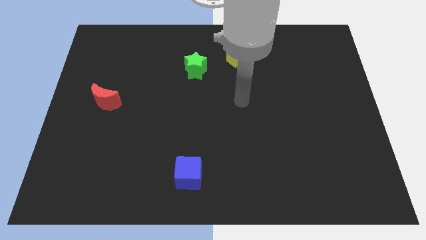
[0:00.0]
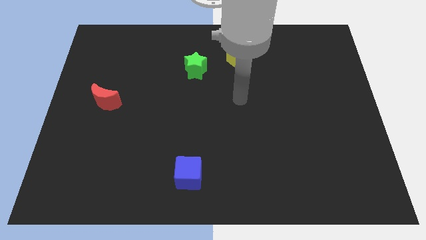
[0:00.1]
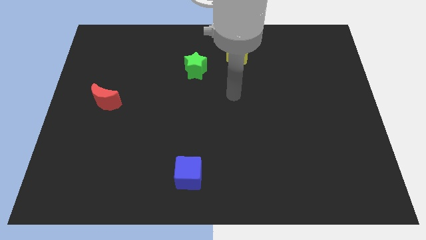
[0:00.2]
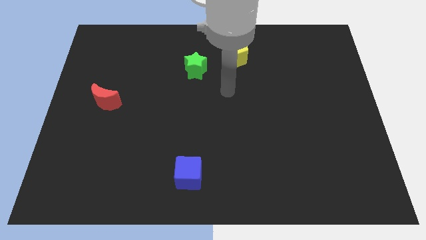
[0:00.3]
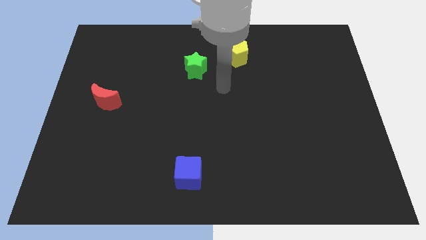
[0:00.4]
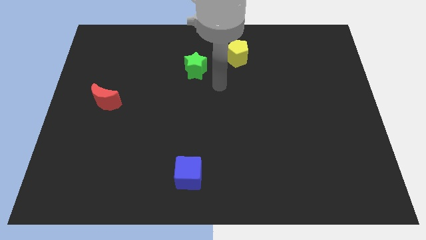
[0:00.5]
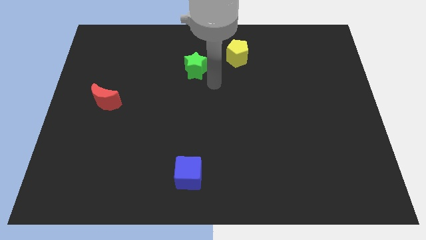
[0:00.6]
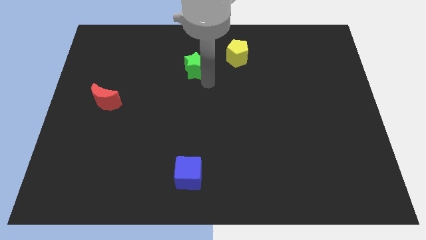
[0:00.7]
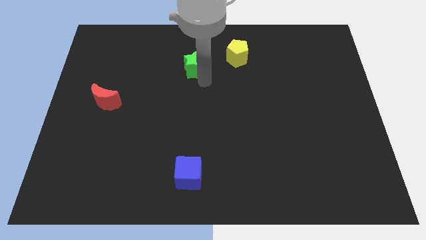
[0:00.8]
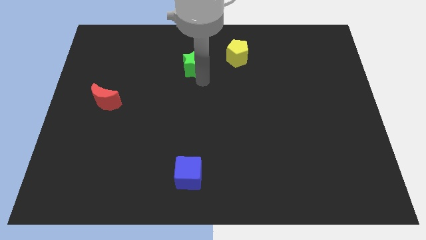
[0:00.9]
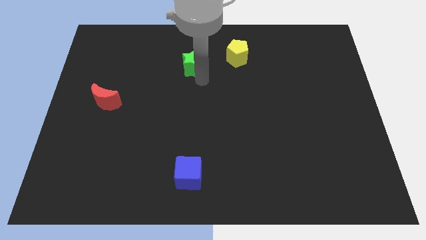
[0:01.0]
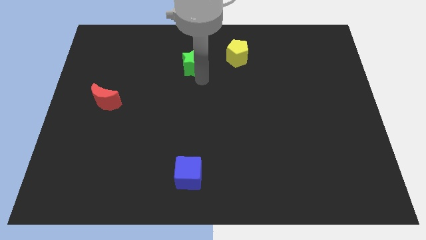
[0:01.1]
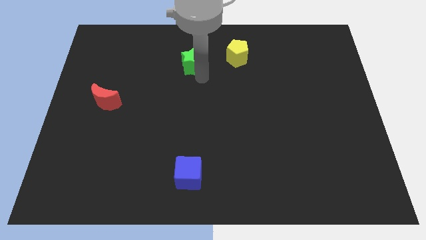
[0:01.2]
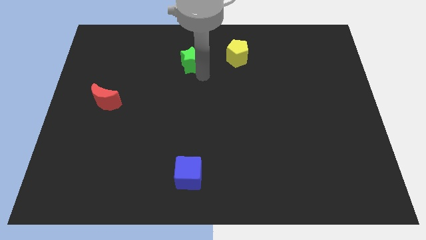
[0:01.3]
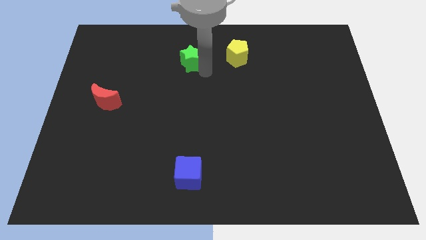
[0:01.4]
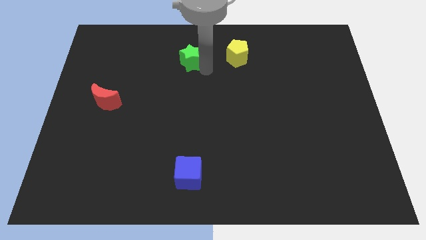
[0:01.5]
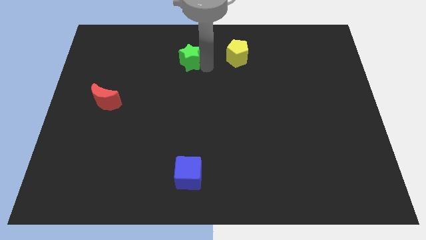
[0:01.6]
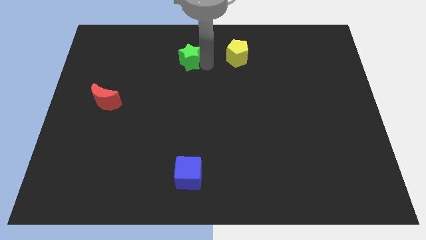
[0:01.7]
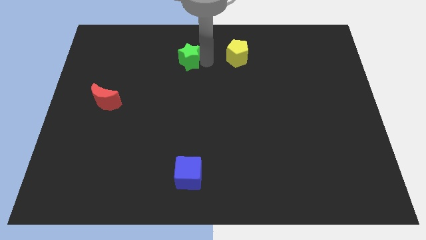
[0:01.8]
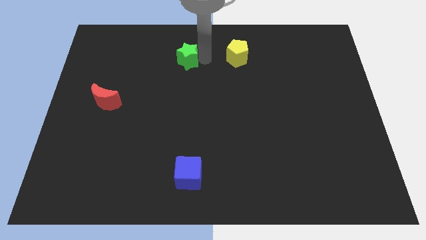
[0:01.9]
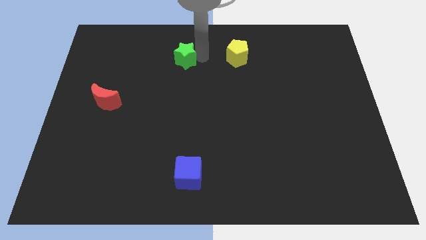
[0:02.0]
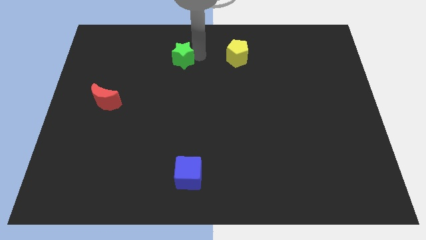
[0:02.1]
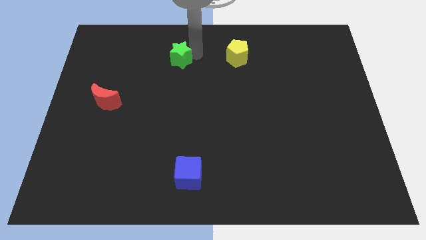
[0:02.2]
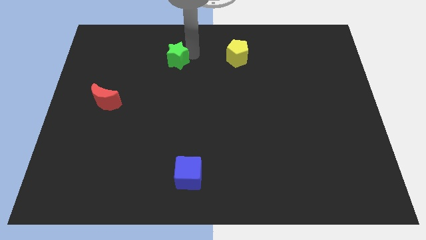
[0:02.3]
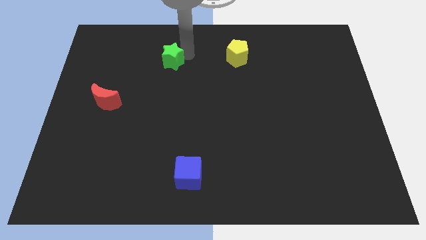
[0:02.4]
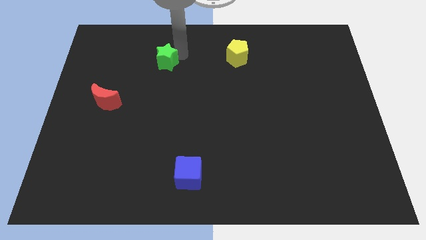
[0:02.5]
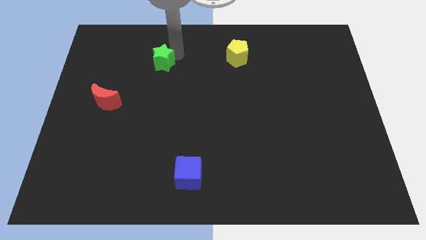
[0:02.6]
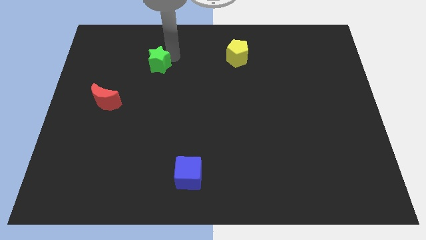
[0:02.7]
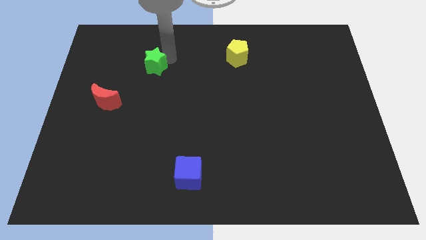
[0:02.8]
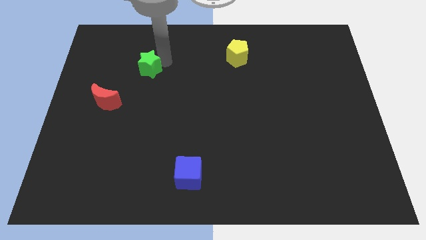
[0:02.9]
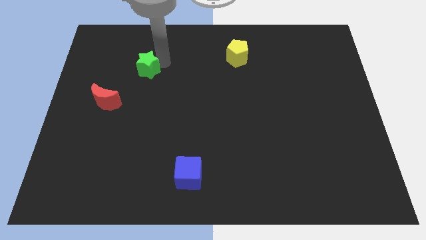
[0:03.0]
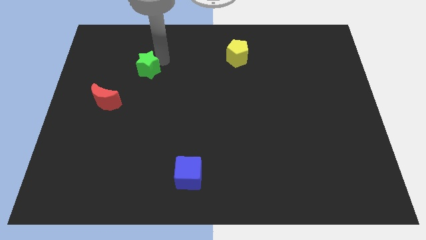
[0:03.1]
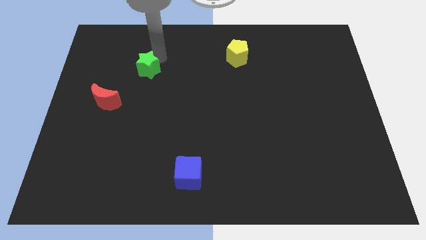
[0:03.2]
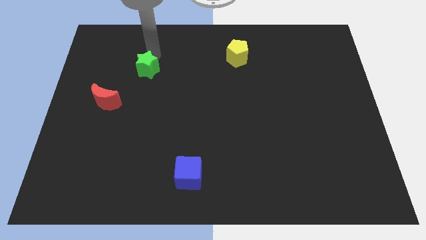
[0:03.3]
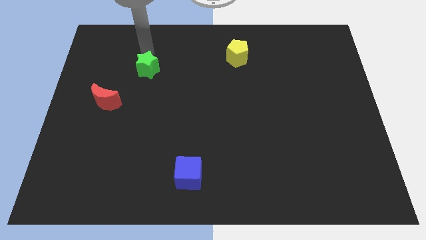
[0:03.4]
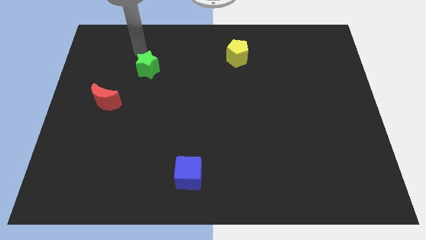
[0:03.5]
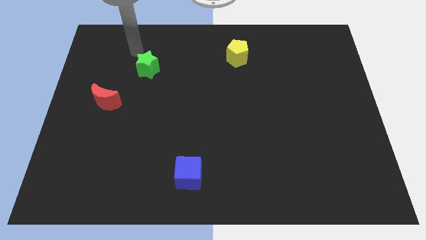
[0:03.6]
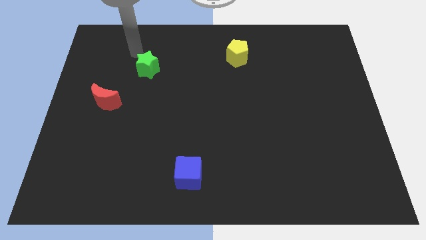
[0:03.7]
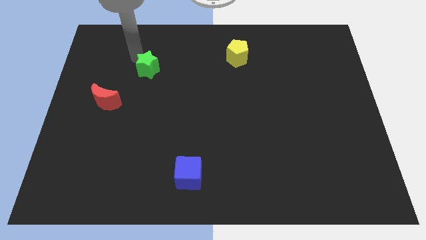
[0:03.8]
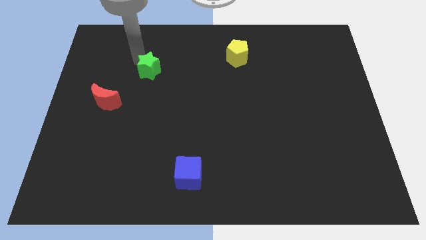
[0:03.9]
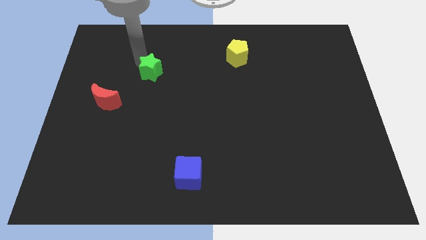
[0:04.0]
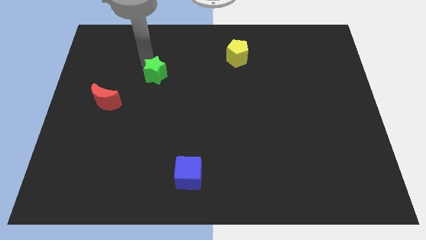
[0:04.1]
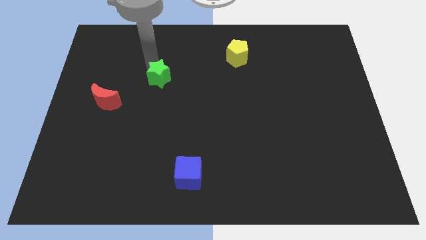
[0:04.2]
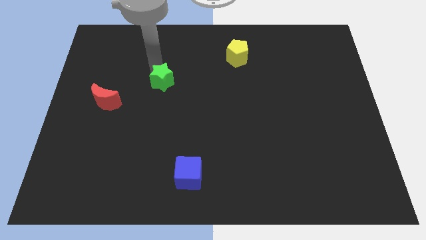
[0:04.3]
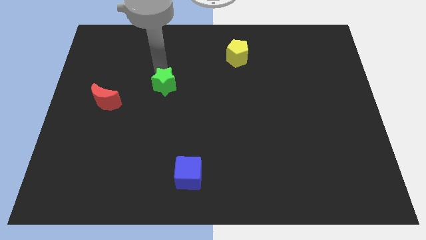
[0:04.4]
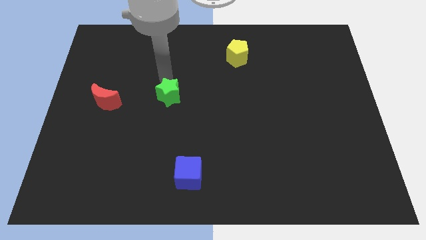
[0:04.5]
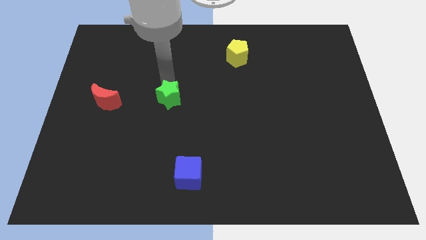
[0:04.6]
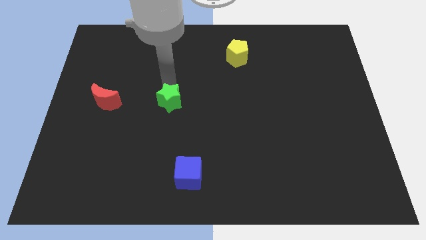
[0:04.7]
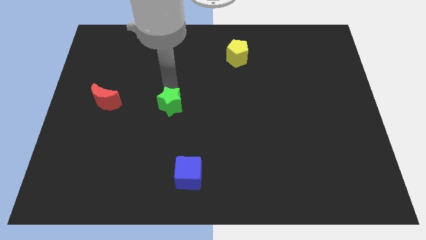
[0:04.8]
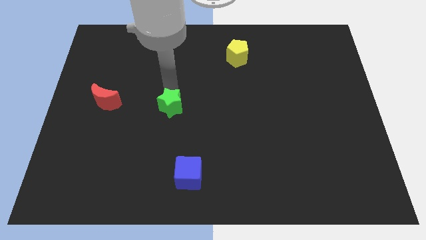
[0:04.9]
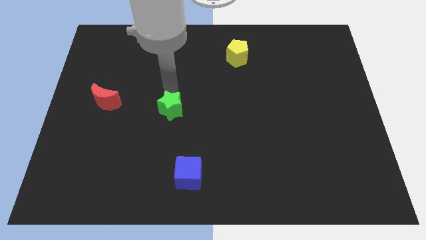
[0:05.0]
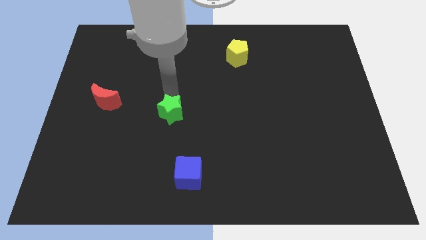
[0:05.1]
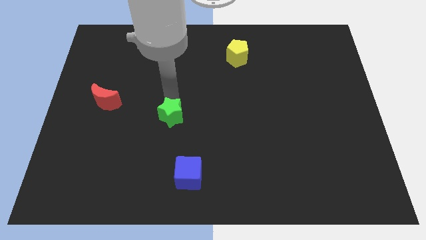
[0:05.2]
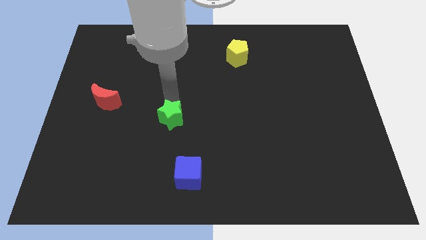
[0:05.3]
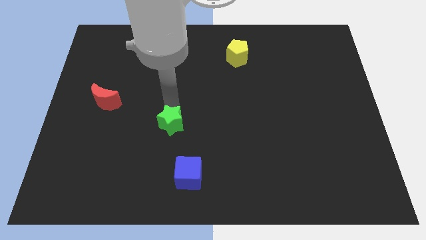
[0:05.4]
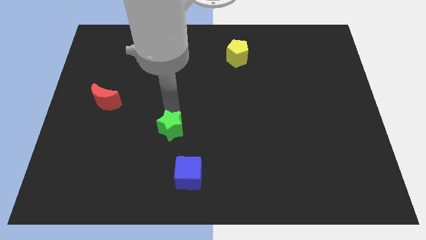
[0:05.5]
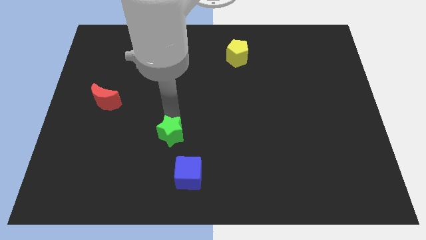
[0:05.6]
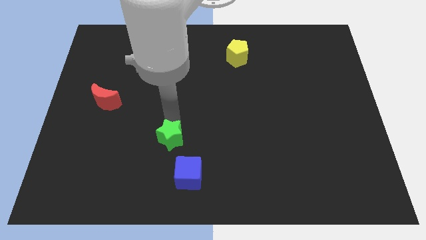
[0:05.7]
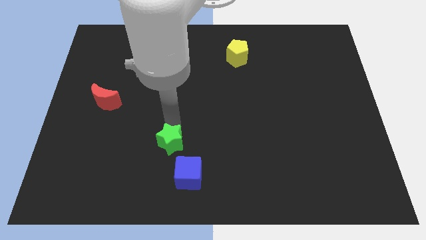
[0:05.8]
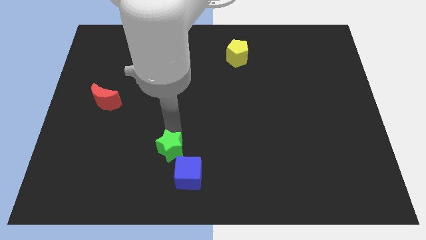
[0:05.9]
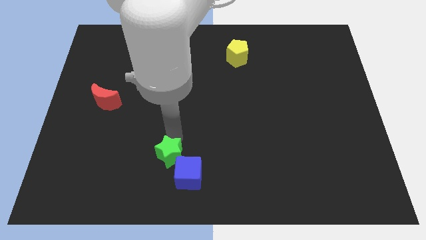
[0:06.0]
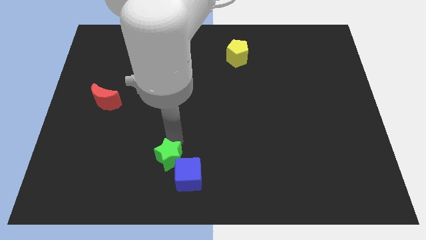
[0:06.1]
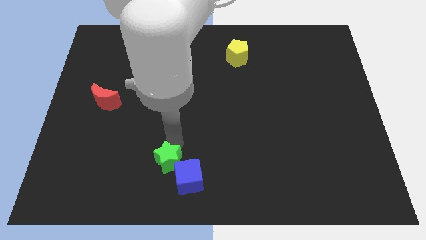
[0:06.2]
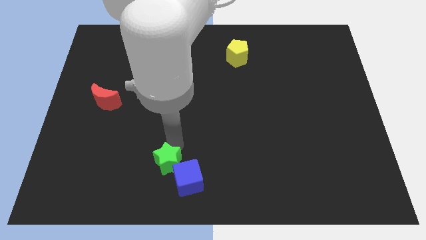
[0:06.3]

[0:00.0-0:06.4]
push the star towards the blue cube

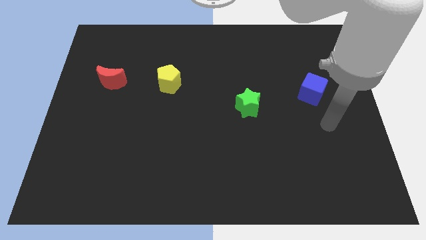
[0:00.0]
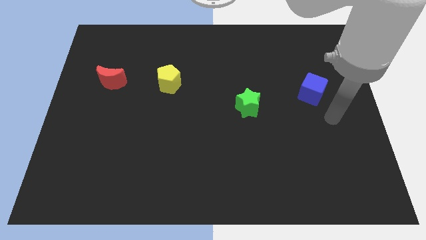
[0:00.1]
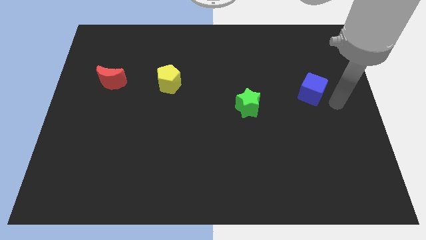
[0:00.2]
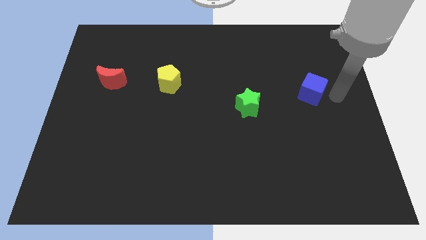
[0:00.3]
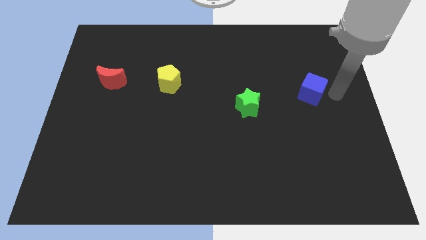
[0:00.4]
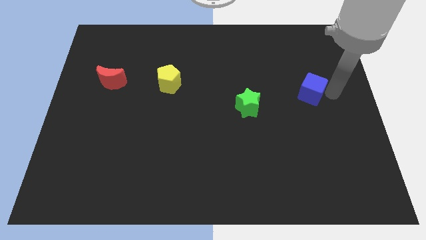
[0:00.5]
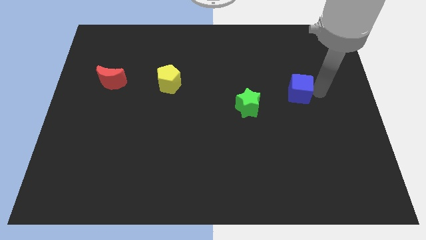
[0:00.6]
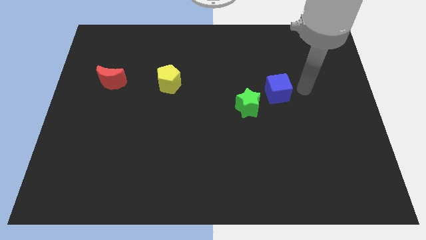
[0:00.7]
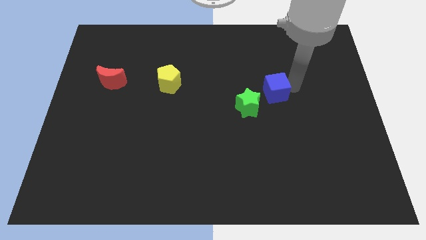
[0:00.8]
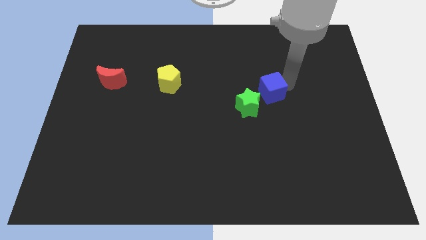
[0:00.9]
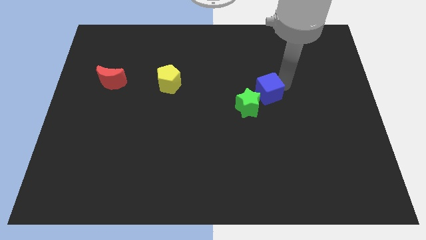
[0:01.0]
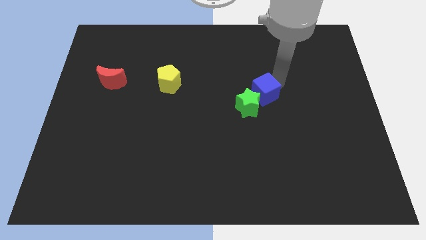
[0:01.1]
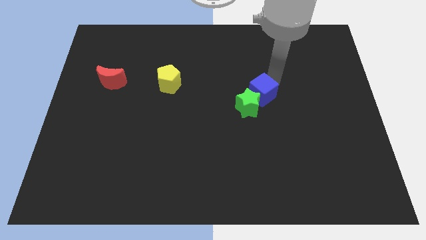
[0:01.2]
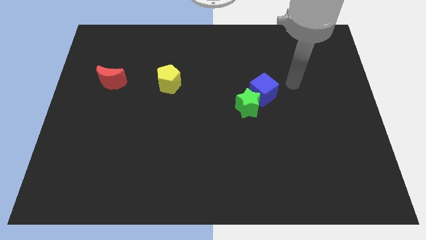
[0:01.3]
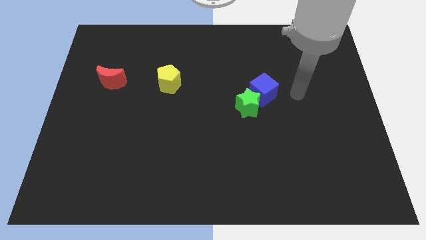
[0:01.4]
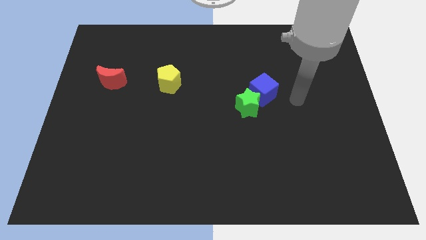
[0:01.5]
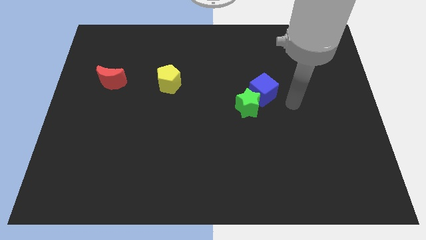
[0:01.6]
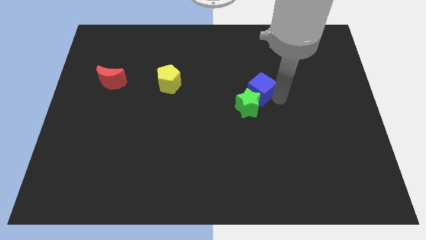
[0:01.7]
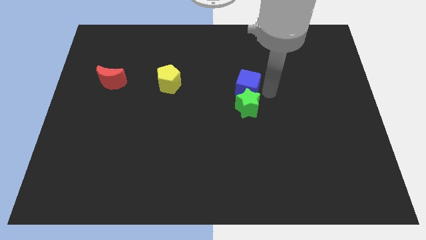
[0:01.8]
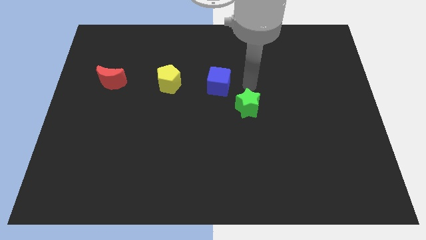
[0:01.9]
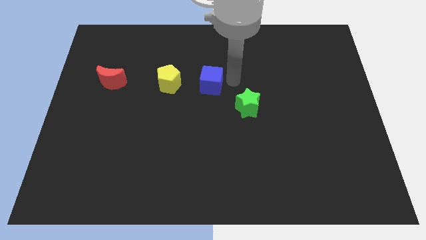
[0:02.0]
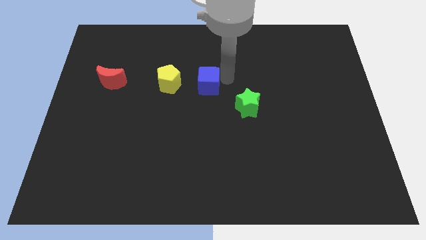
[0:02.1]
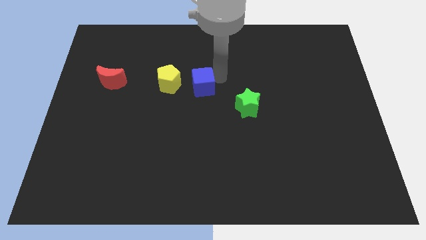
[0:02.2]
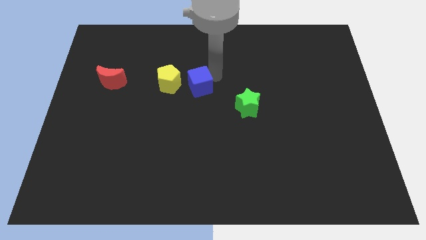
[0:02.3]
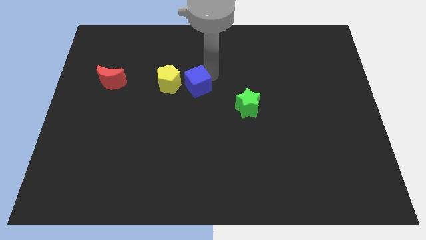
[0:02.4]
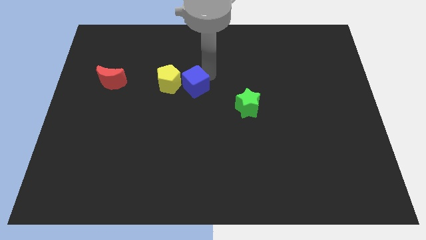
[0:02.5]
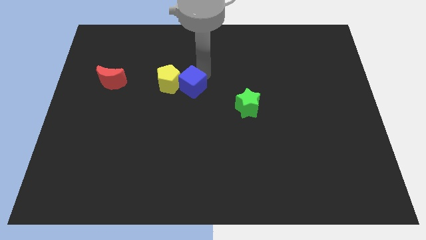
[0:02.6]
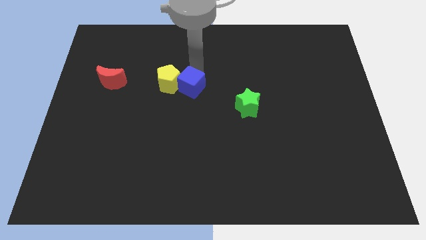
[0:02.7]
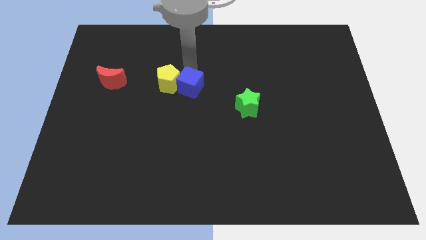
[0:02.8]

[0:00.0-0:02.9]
put the cube towards the yellow pentagon
